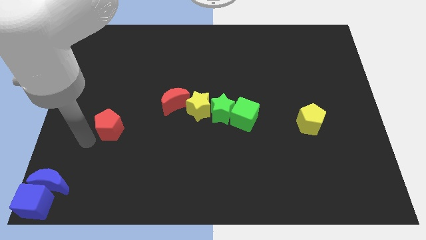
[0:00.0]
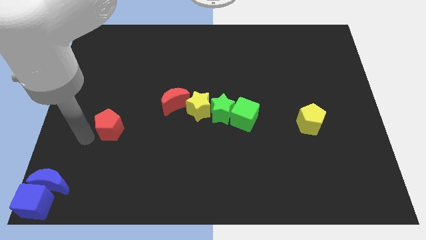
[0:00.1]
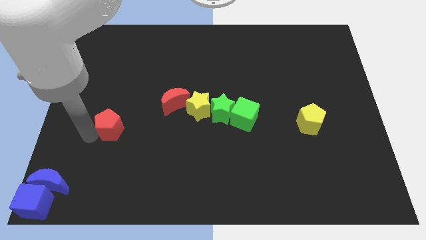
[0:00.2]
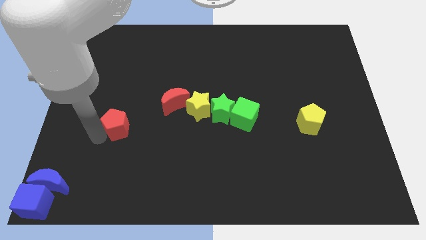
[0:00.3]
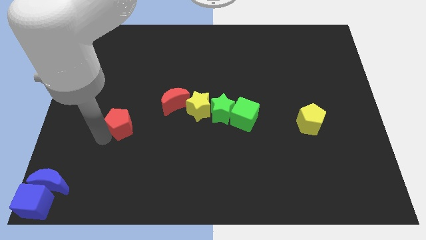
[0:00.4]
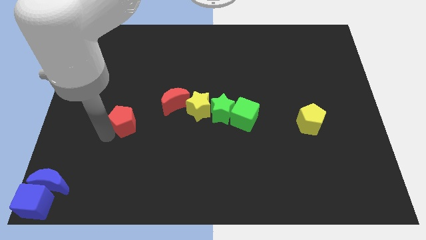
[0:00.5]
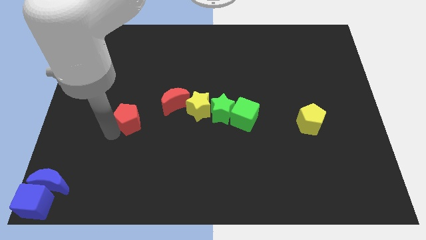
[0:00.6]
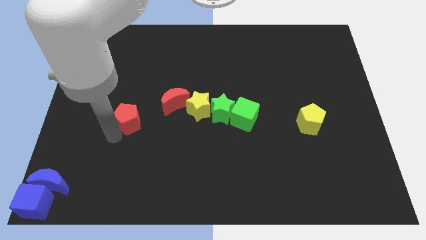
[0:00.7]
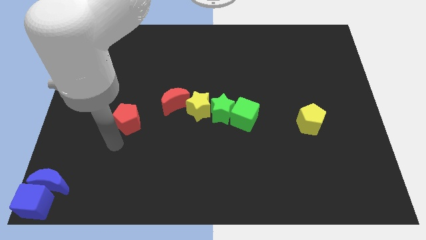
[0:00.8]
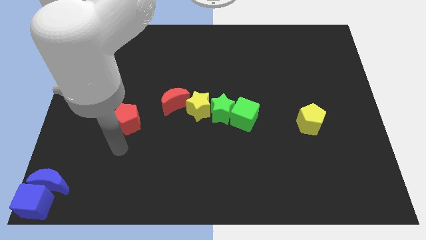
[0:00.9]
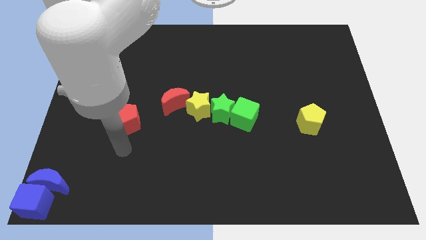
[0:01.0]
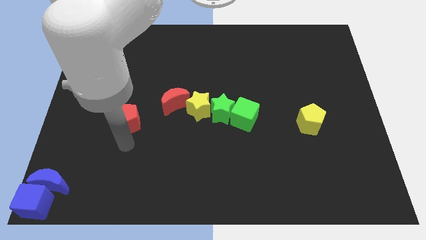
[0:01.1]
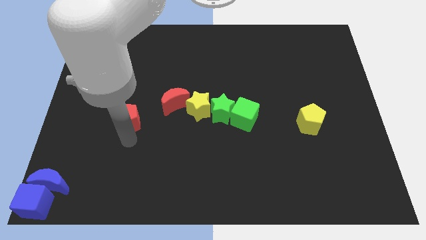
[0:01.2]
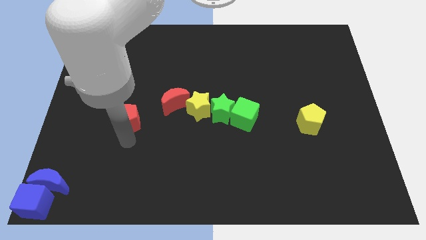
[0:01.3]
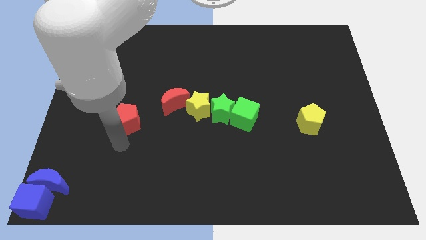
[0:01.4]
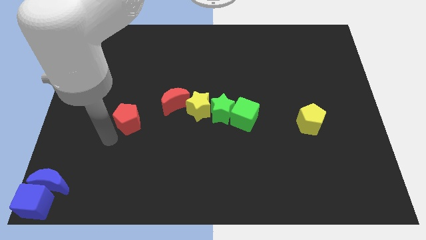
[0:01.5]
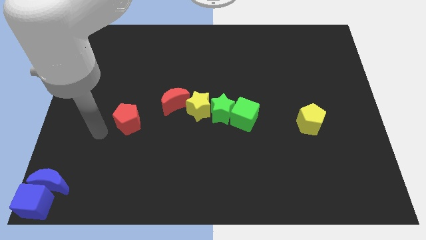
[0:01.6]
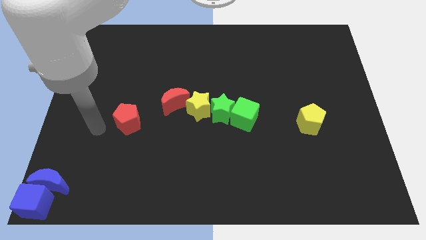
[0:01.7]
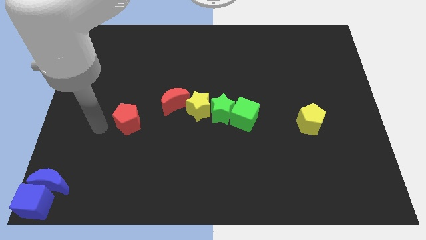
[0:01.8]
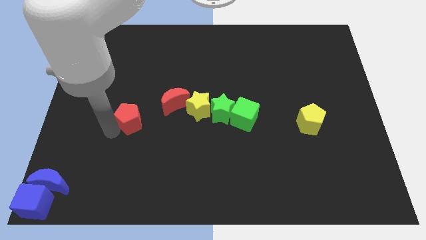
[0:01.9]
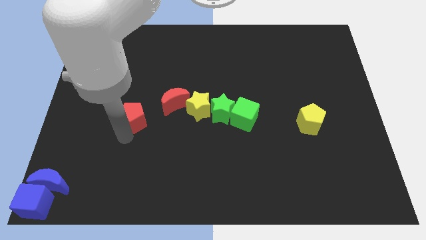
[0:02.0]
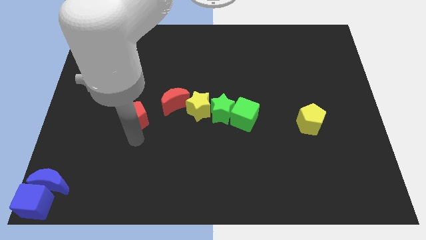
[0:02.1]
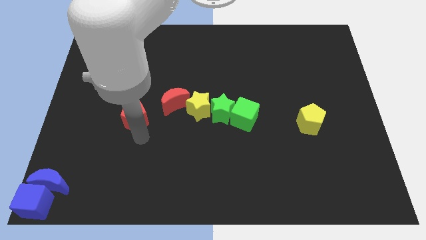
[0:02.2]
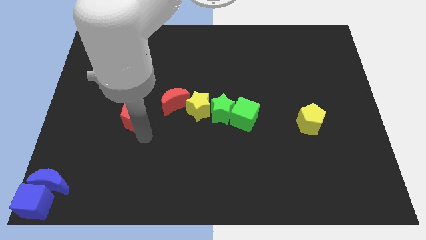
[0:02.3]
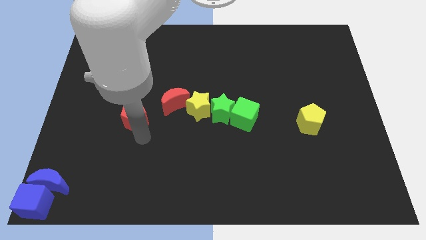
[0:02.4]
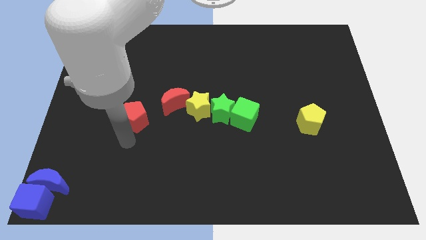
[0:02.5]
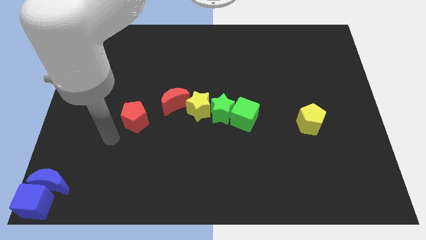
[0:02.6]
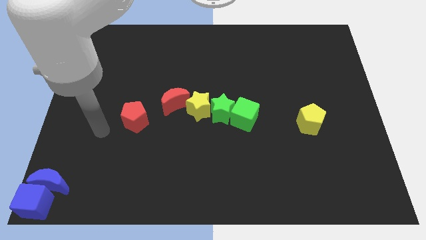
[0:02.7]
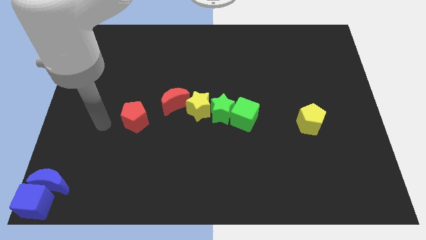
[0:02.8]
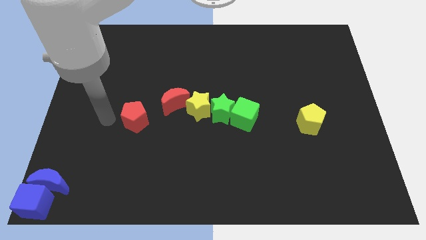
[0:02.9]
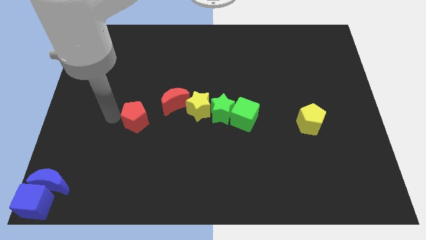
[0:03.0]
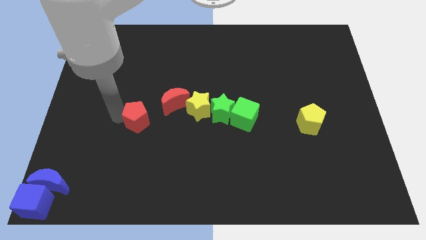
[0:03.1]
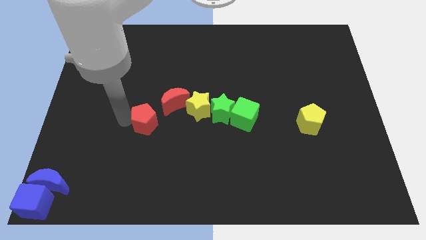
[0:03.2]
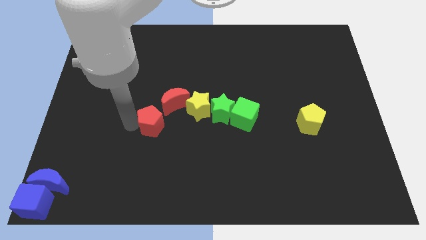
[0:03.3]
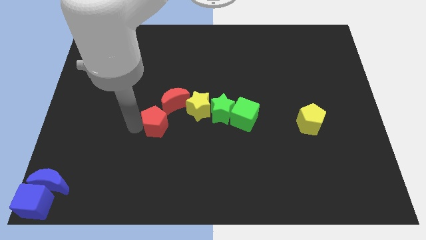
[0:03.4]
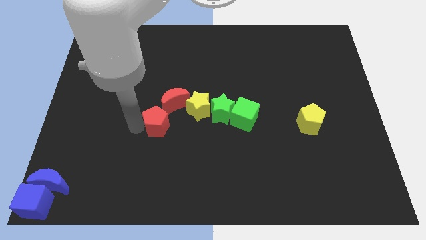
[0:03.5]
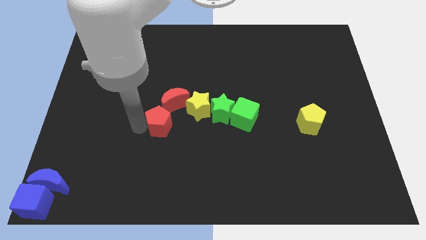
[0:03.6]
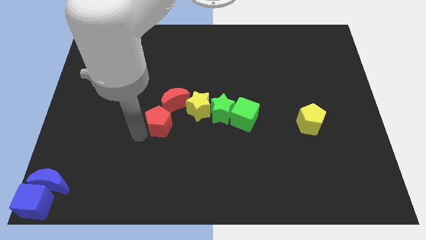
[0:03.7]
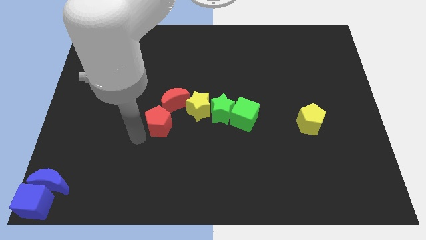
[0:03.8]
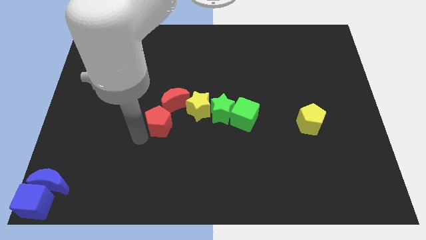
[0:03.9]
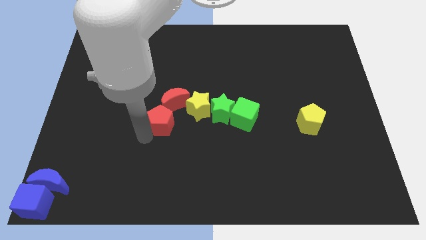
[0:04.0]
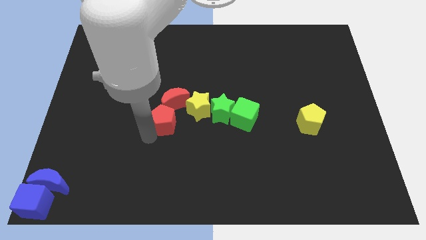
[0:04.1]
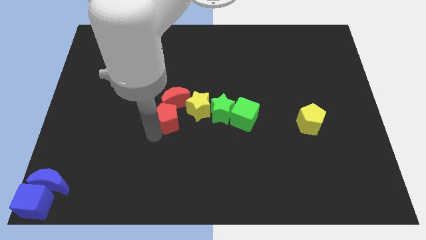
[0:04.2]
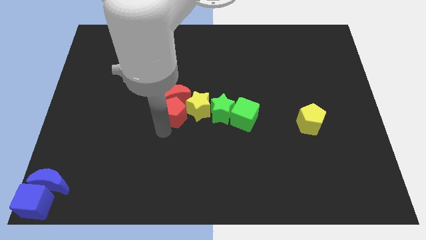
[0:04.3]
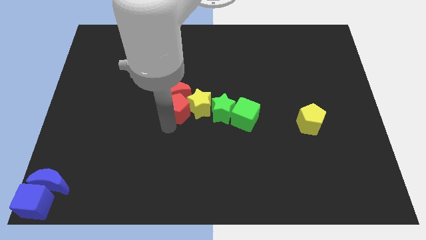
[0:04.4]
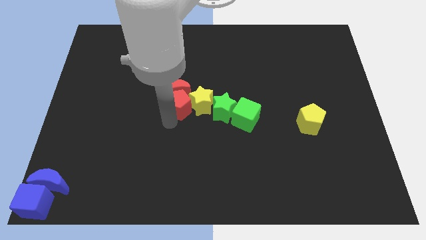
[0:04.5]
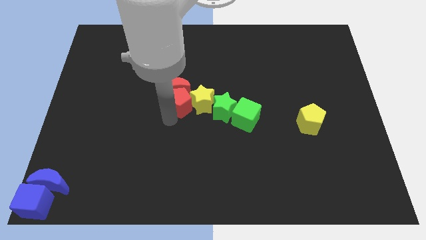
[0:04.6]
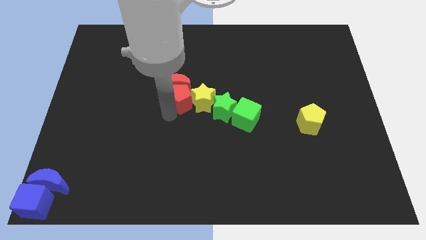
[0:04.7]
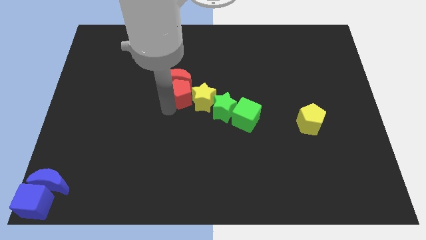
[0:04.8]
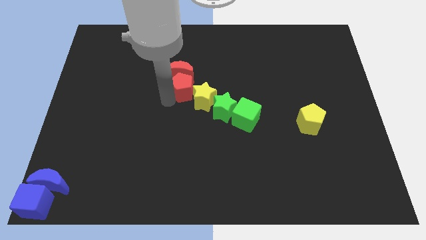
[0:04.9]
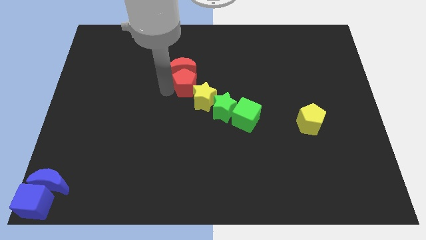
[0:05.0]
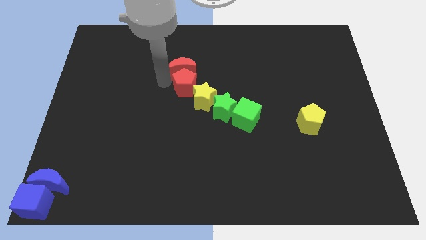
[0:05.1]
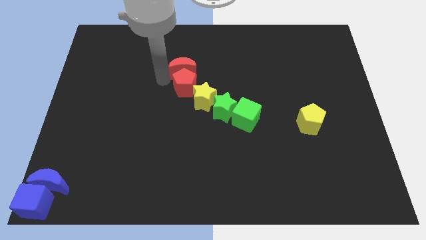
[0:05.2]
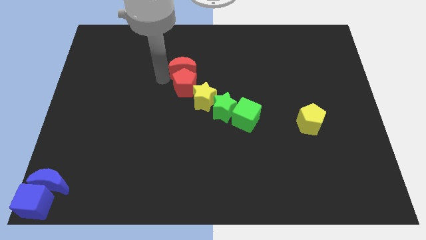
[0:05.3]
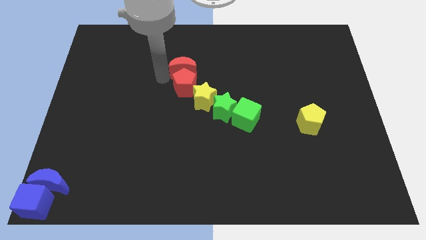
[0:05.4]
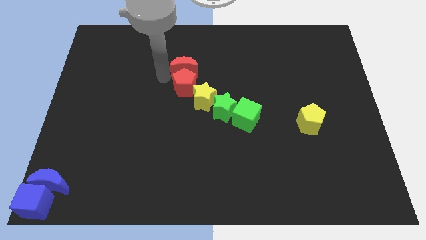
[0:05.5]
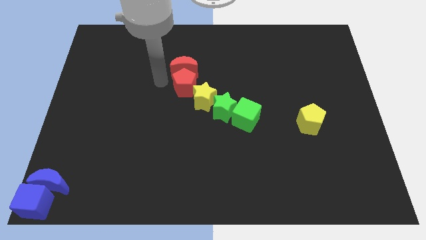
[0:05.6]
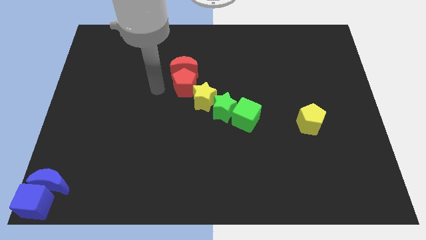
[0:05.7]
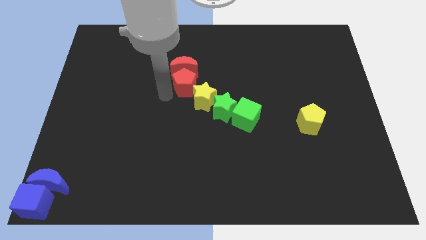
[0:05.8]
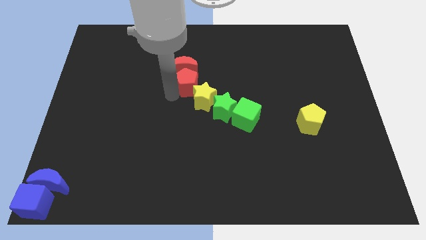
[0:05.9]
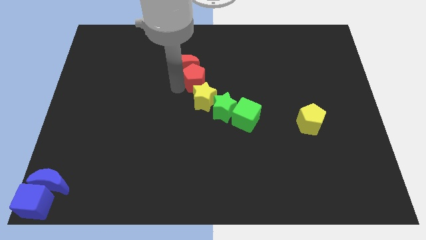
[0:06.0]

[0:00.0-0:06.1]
move the red pentagon to the top left side of the yellow star

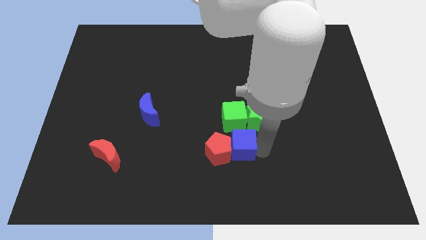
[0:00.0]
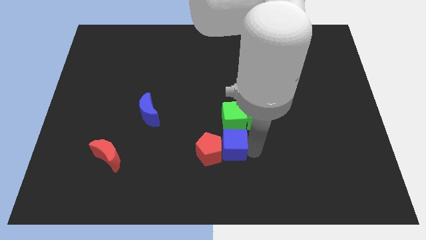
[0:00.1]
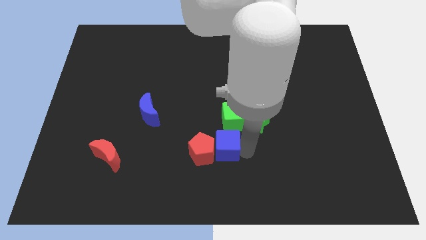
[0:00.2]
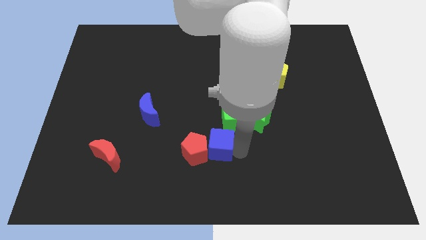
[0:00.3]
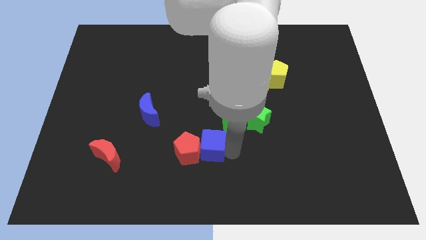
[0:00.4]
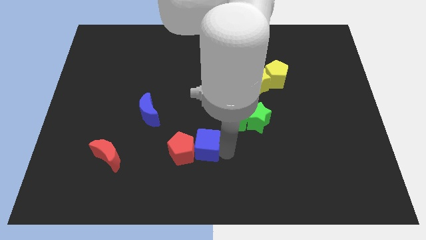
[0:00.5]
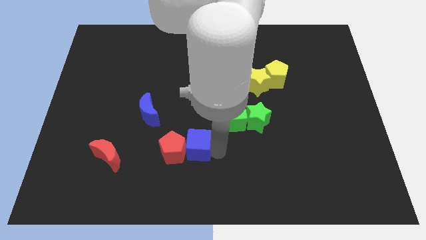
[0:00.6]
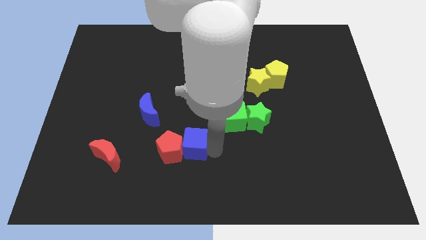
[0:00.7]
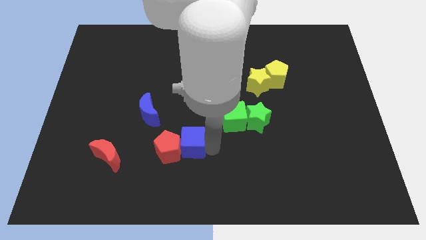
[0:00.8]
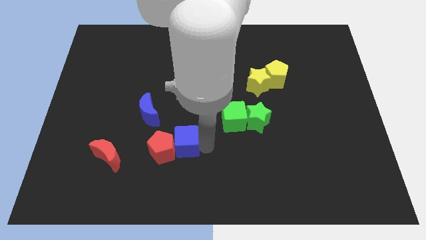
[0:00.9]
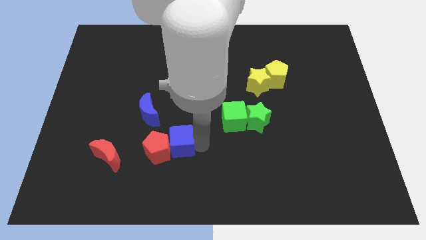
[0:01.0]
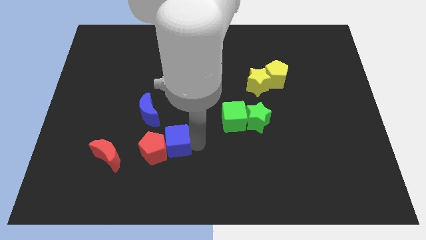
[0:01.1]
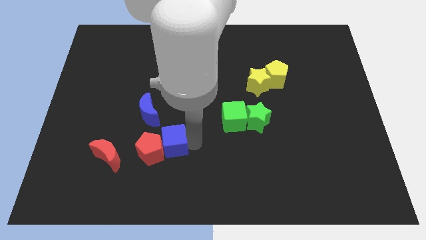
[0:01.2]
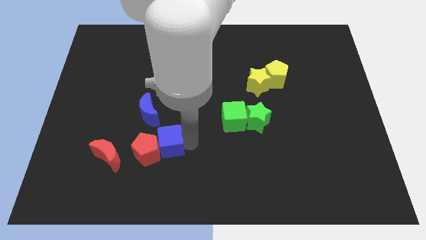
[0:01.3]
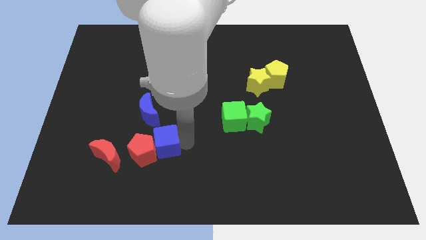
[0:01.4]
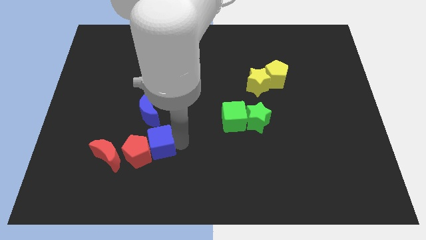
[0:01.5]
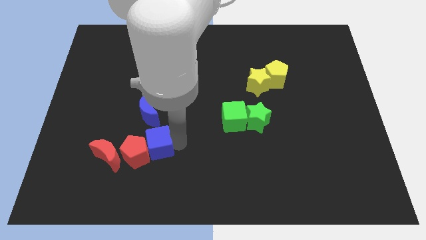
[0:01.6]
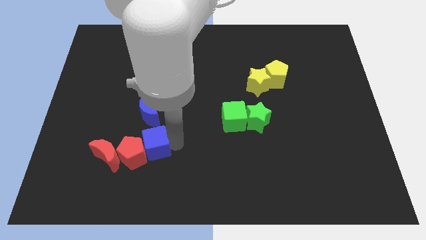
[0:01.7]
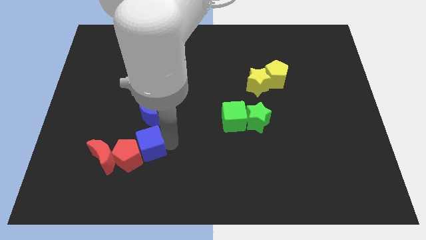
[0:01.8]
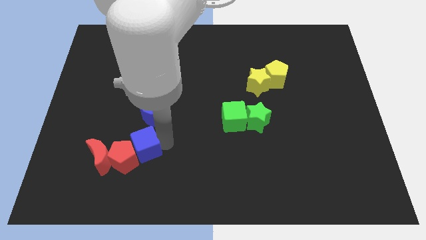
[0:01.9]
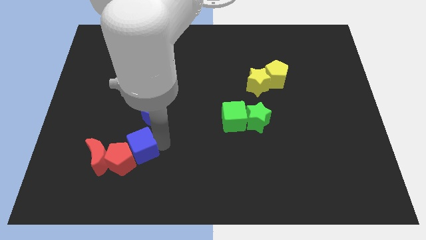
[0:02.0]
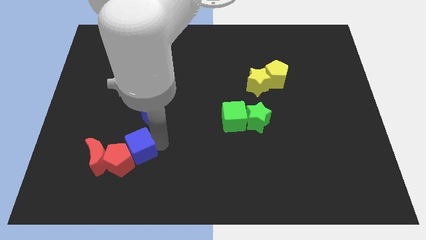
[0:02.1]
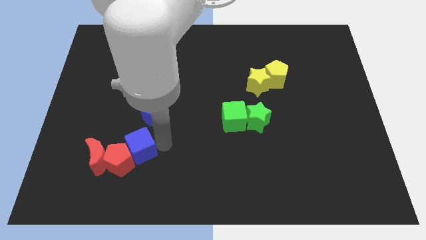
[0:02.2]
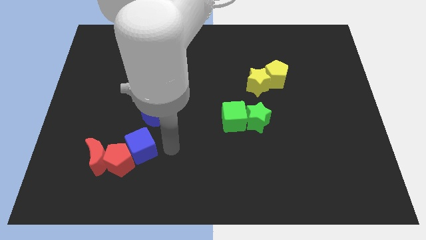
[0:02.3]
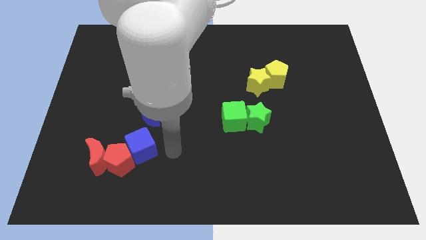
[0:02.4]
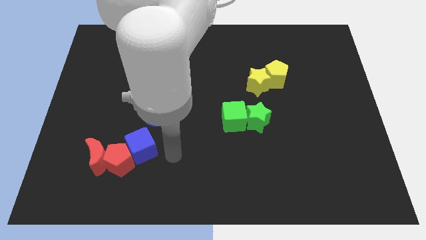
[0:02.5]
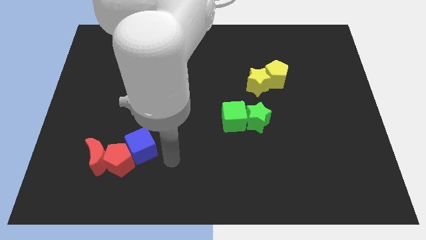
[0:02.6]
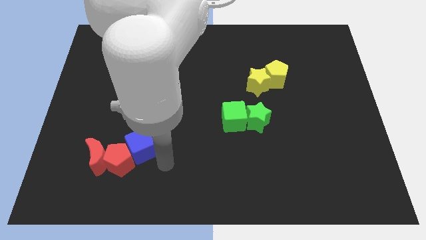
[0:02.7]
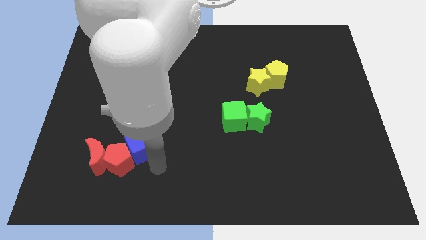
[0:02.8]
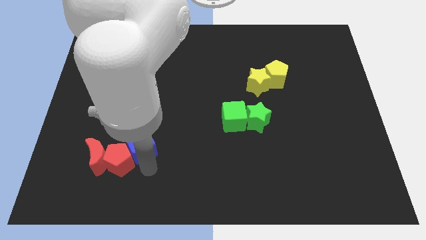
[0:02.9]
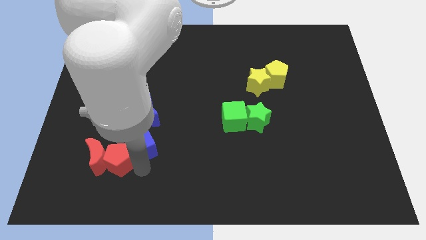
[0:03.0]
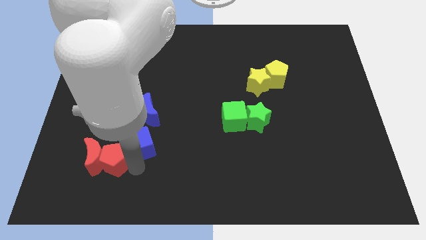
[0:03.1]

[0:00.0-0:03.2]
move the blue cube along with red pentagon into the red crescent
